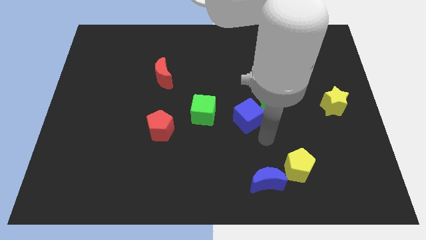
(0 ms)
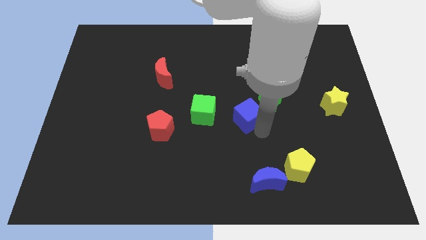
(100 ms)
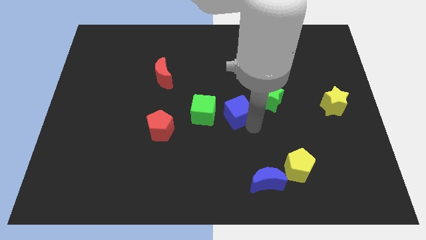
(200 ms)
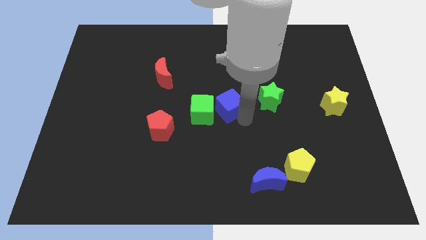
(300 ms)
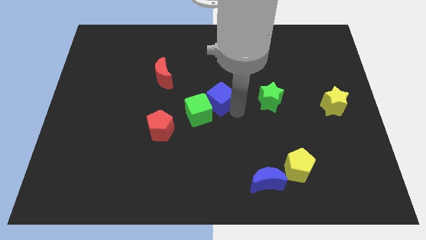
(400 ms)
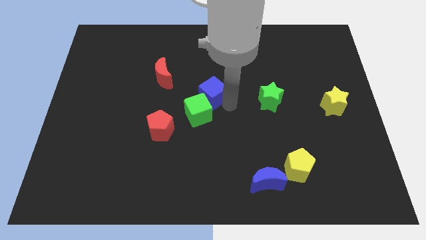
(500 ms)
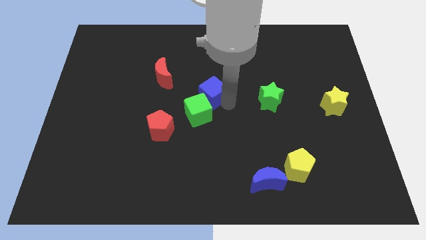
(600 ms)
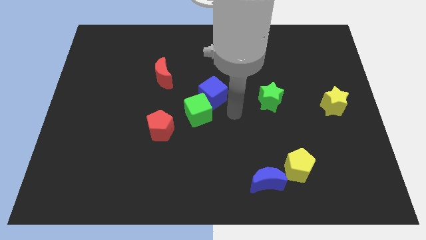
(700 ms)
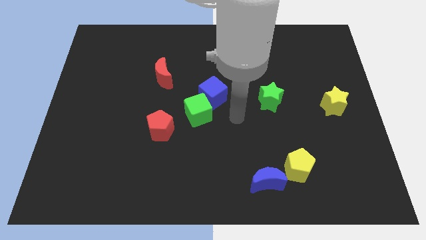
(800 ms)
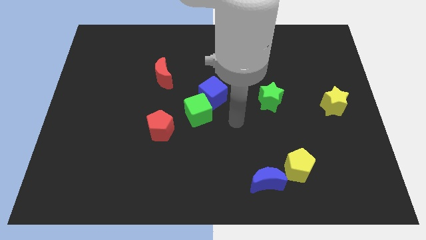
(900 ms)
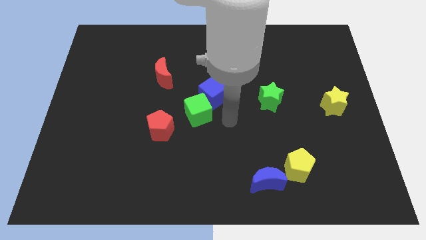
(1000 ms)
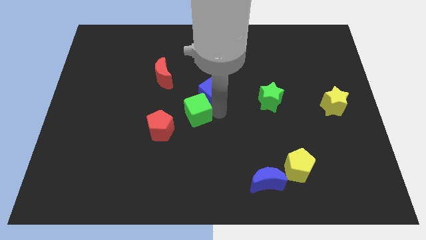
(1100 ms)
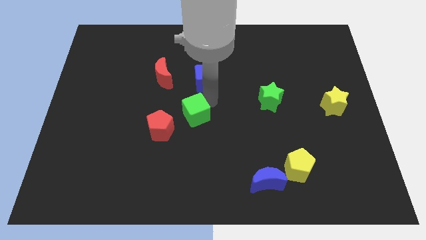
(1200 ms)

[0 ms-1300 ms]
move the blue cube away from green star

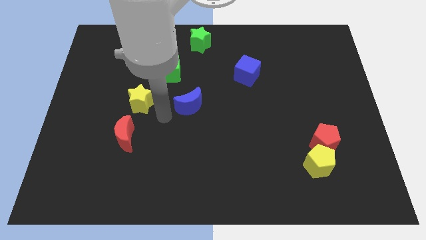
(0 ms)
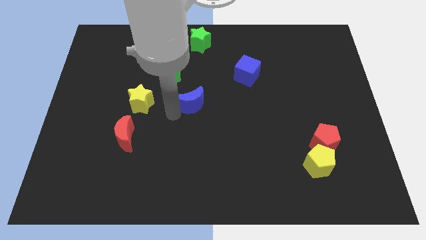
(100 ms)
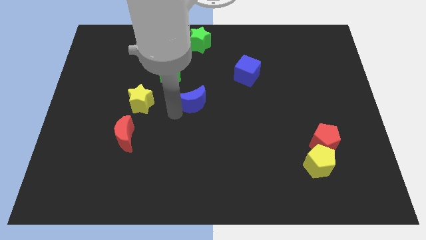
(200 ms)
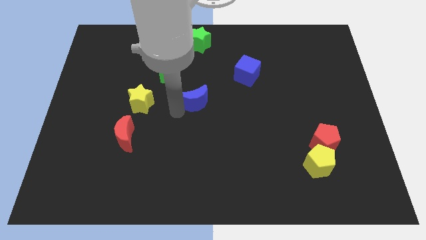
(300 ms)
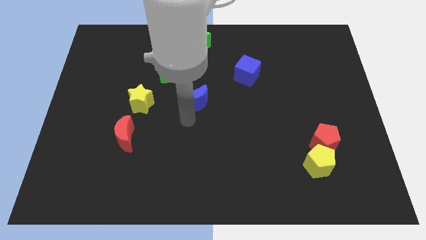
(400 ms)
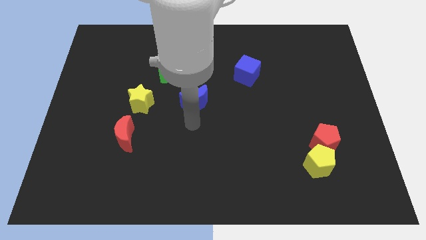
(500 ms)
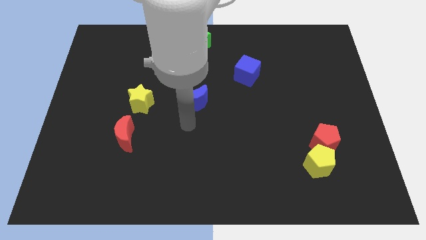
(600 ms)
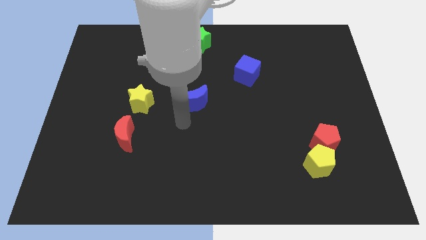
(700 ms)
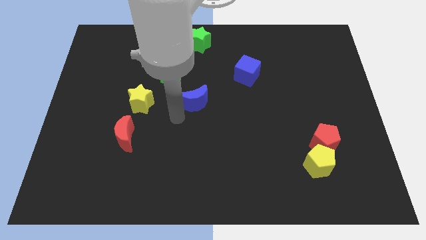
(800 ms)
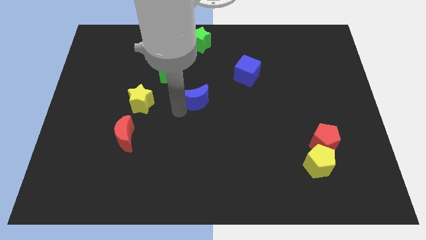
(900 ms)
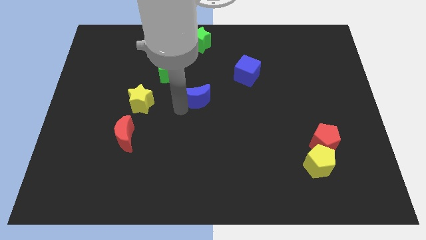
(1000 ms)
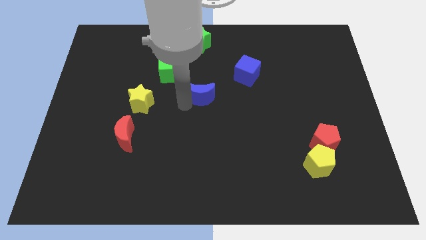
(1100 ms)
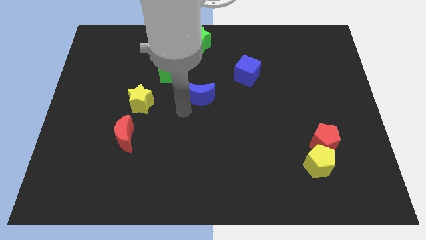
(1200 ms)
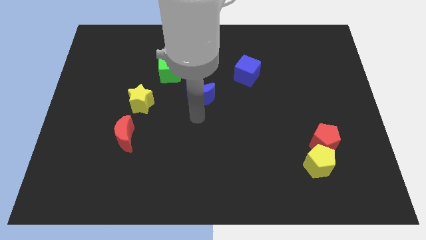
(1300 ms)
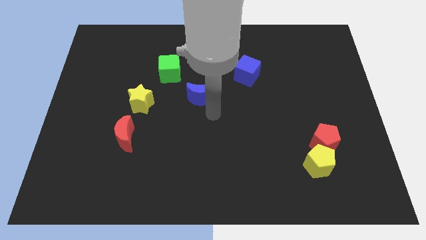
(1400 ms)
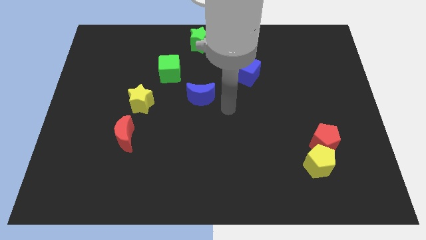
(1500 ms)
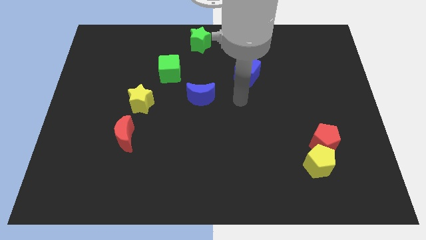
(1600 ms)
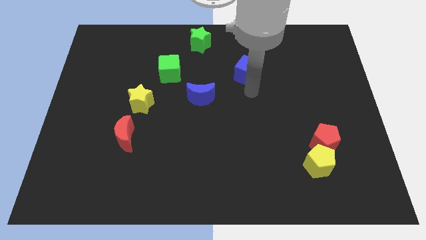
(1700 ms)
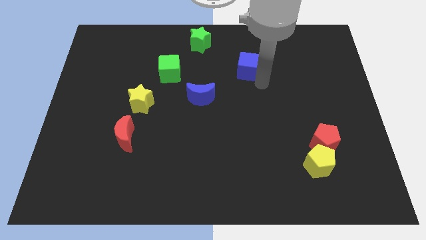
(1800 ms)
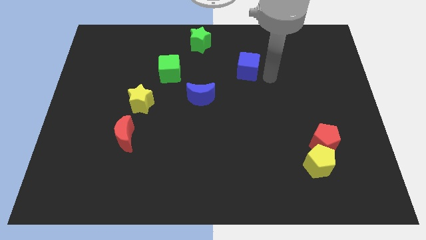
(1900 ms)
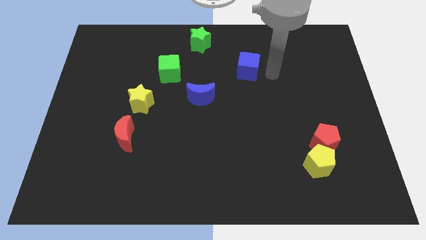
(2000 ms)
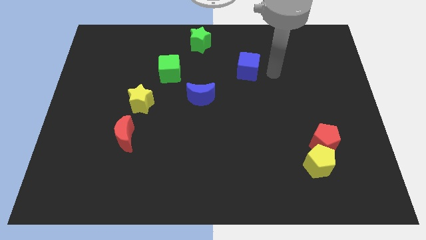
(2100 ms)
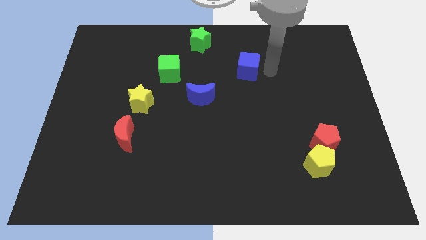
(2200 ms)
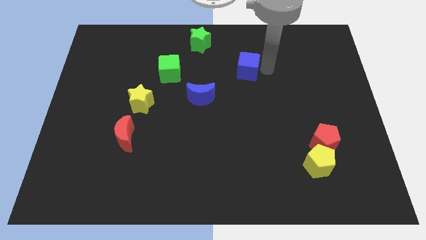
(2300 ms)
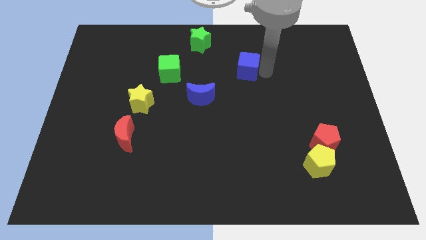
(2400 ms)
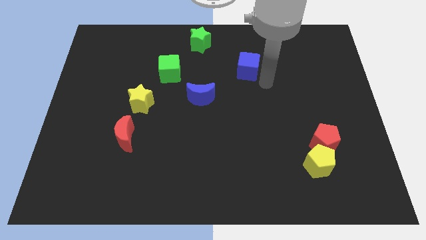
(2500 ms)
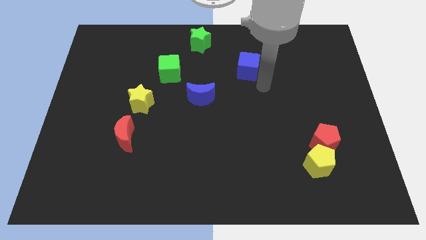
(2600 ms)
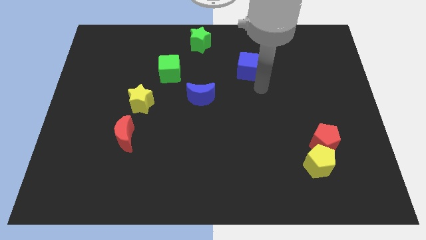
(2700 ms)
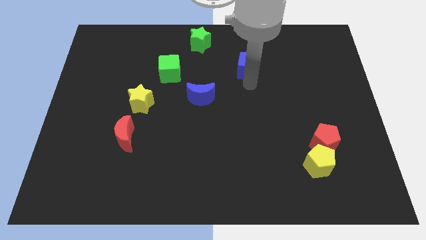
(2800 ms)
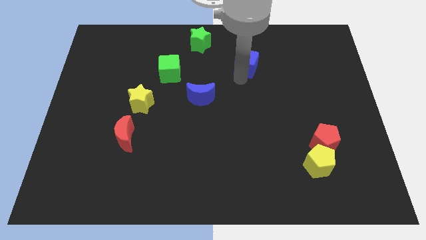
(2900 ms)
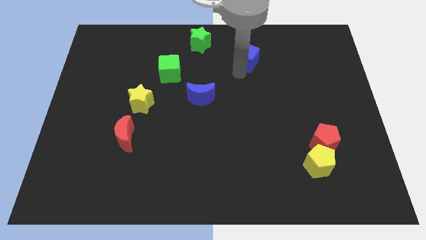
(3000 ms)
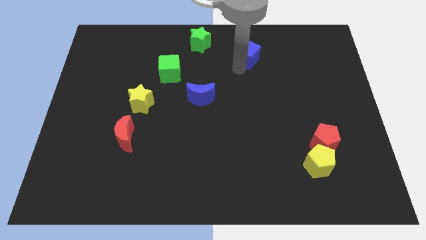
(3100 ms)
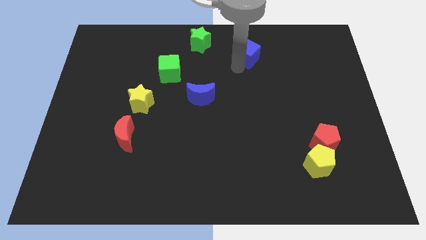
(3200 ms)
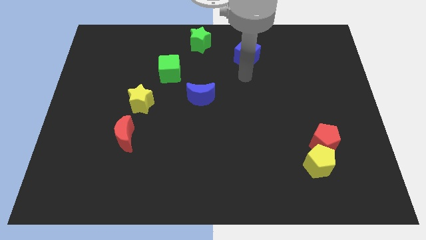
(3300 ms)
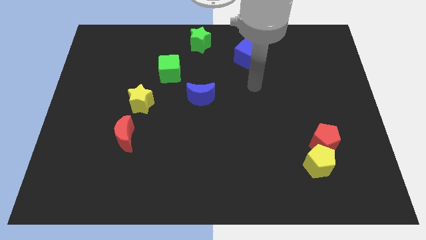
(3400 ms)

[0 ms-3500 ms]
move the blue cube to the top center of the board

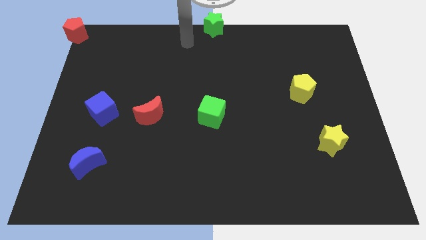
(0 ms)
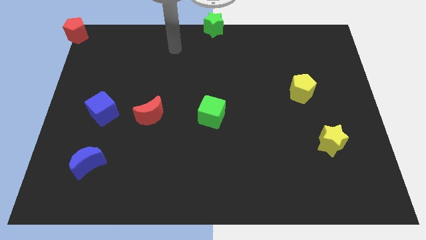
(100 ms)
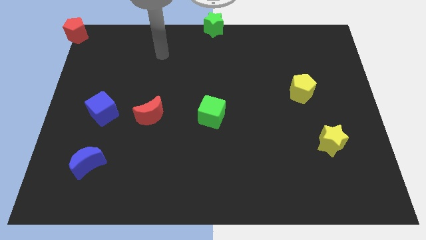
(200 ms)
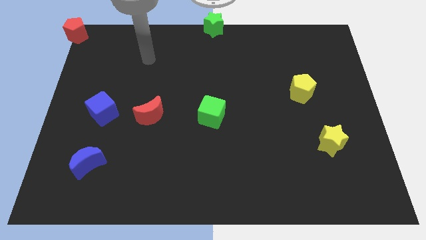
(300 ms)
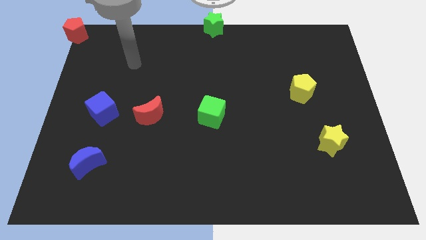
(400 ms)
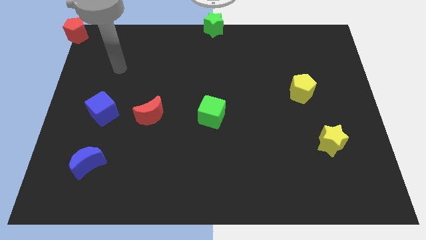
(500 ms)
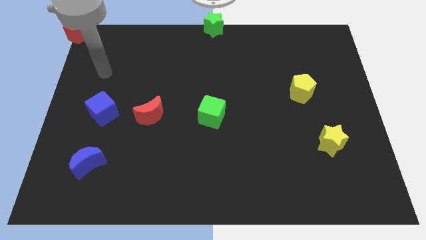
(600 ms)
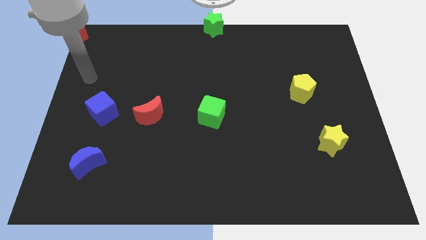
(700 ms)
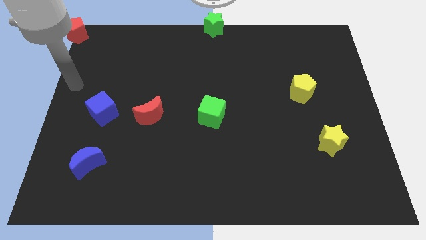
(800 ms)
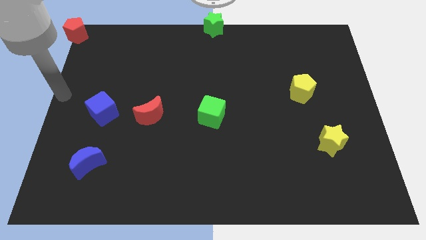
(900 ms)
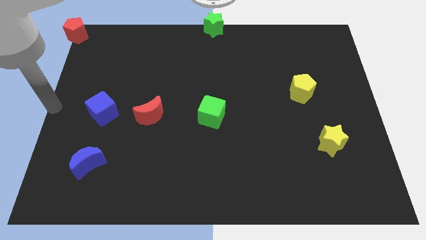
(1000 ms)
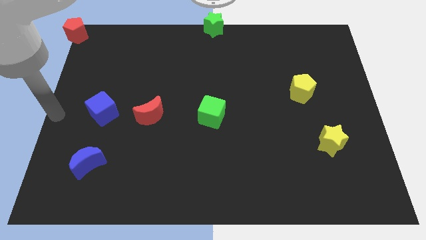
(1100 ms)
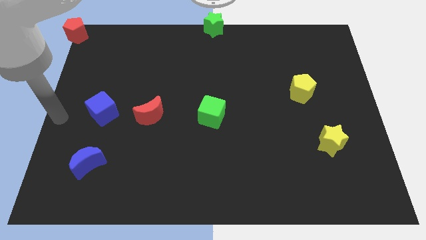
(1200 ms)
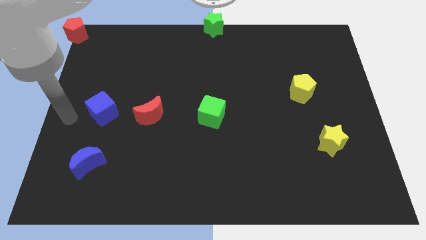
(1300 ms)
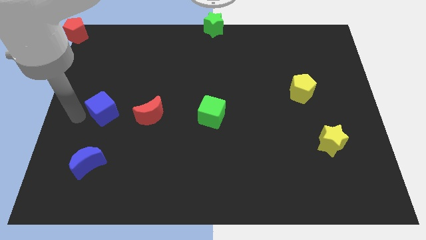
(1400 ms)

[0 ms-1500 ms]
move your arm away from the green star

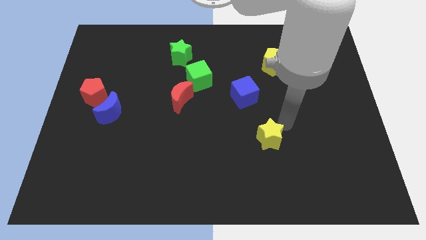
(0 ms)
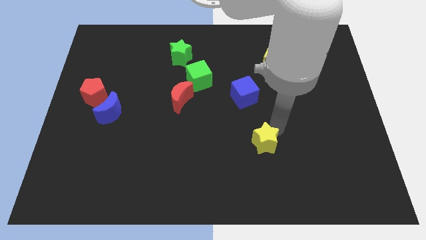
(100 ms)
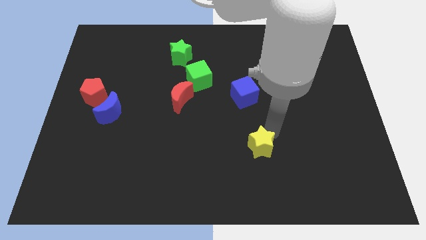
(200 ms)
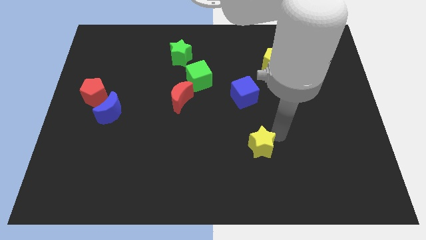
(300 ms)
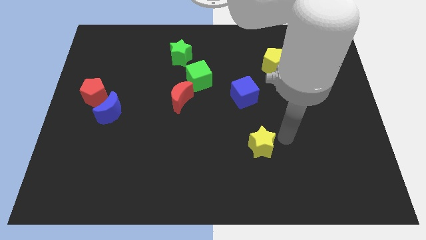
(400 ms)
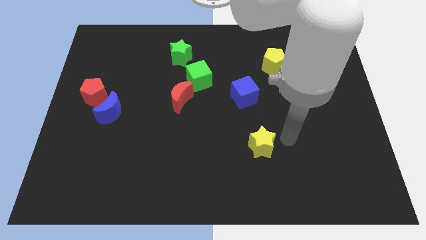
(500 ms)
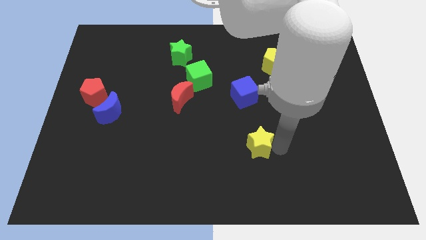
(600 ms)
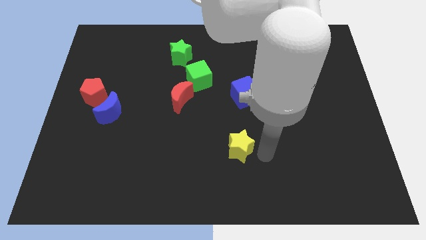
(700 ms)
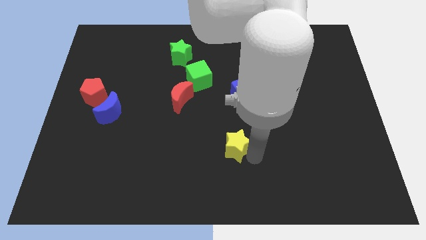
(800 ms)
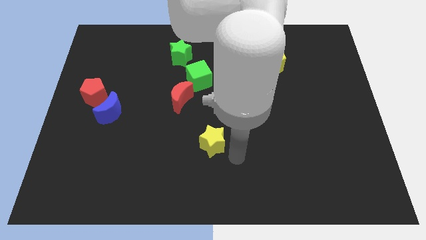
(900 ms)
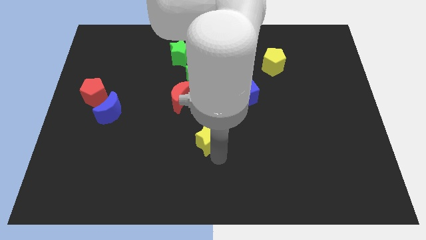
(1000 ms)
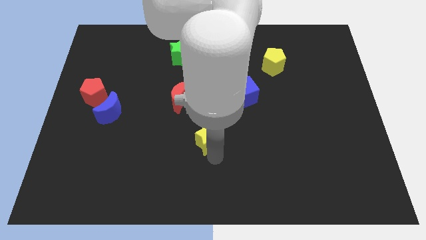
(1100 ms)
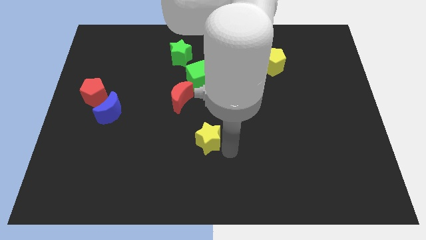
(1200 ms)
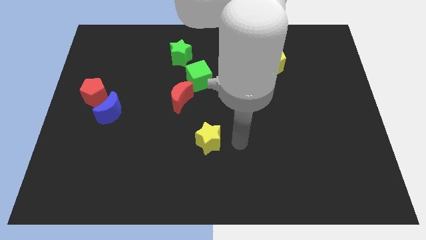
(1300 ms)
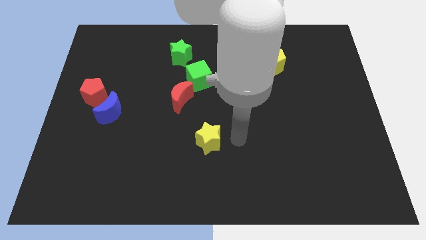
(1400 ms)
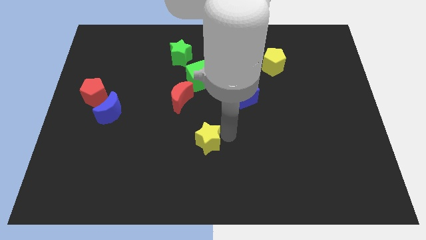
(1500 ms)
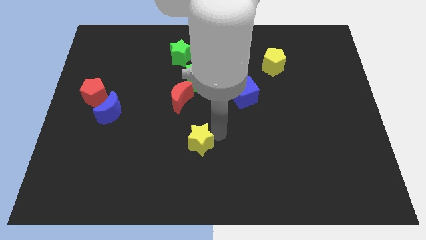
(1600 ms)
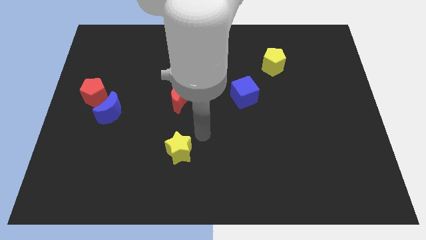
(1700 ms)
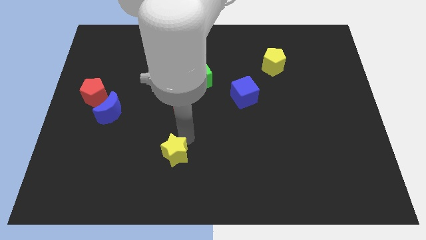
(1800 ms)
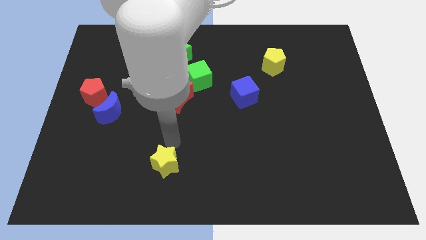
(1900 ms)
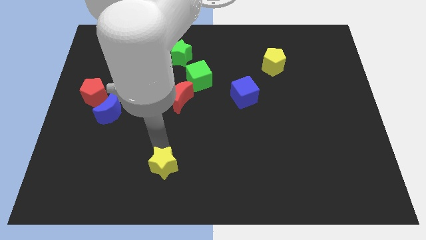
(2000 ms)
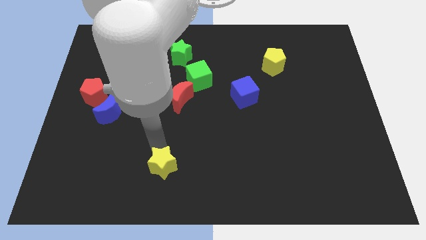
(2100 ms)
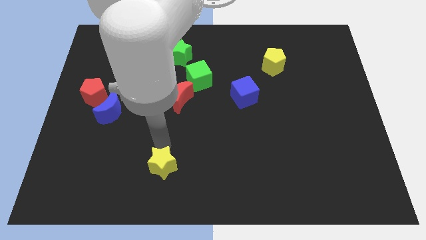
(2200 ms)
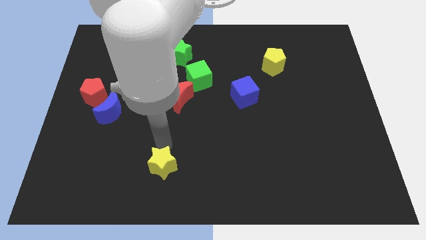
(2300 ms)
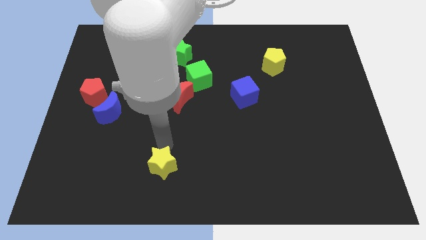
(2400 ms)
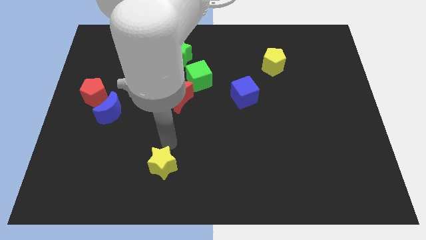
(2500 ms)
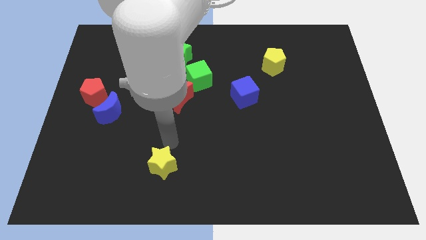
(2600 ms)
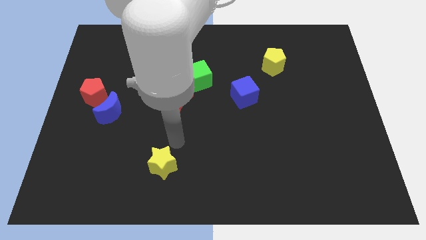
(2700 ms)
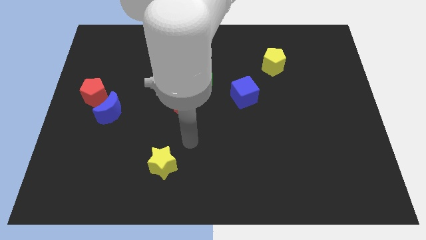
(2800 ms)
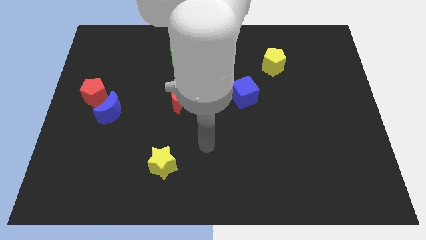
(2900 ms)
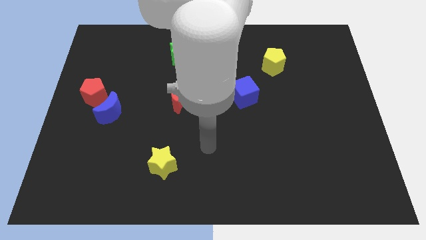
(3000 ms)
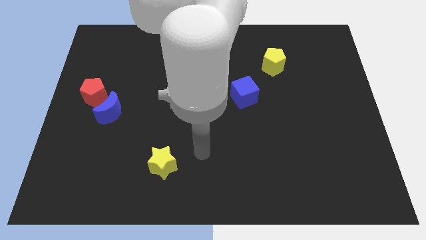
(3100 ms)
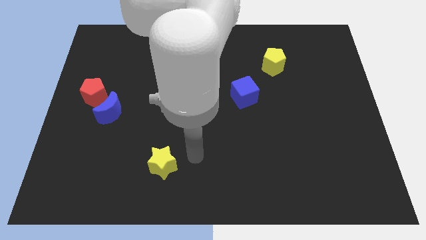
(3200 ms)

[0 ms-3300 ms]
place the yellow star diagonally to the red moon
